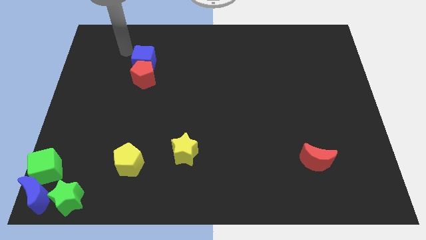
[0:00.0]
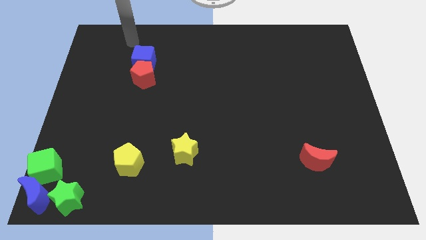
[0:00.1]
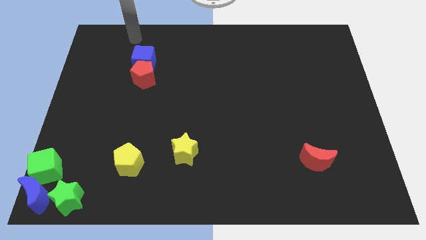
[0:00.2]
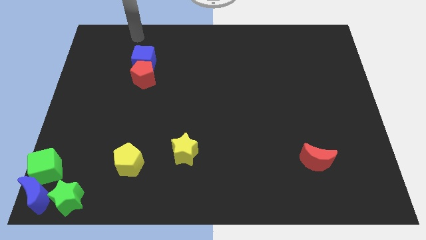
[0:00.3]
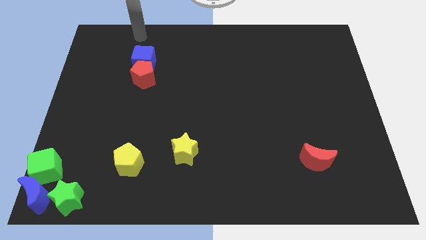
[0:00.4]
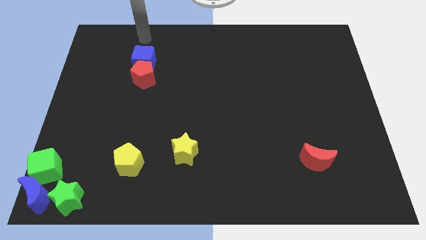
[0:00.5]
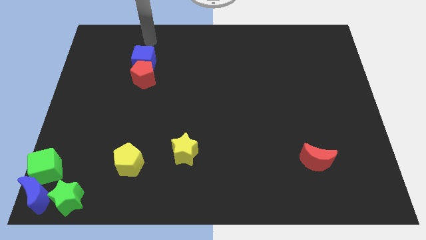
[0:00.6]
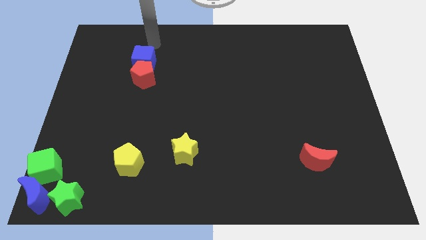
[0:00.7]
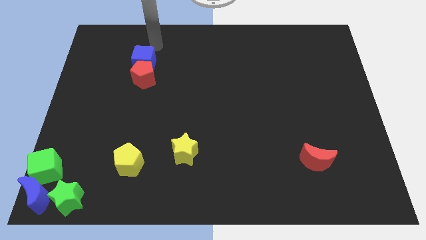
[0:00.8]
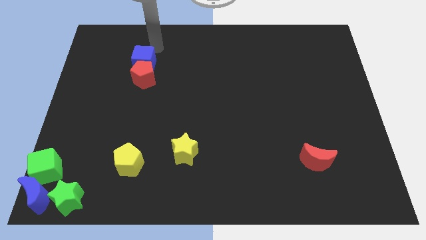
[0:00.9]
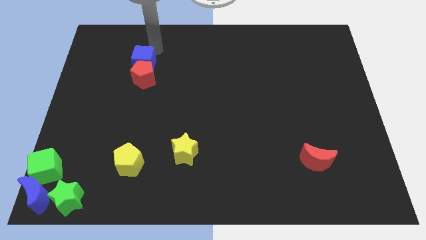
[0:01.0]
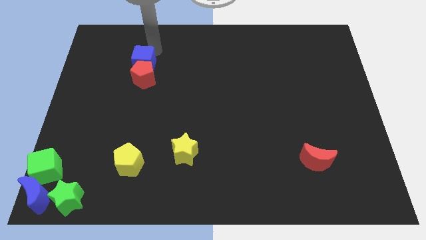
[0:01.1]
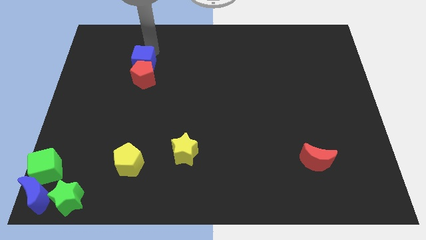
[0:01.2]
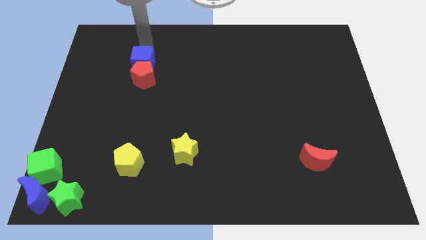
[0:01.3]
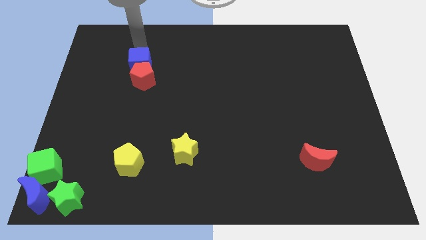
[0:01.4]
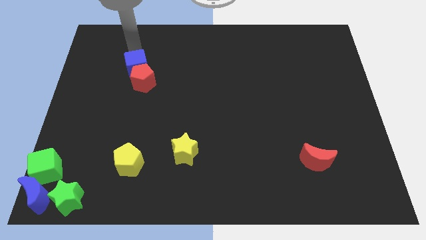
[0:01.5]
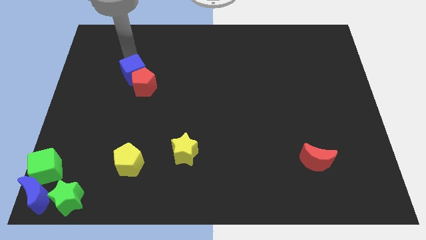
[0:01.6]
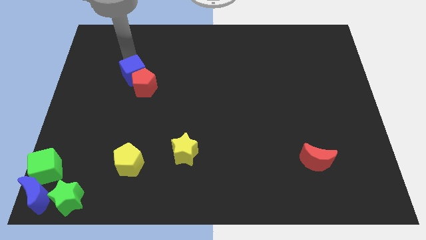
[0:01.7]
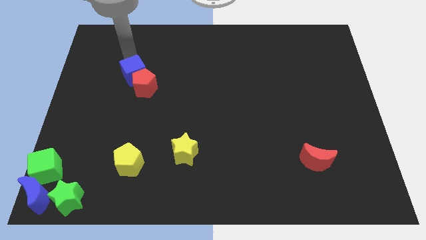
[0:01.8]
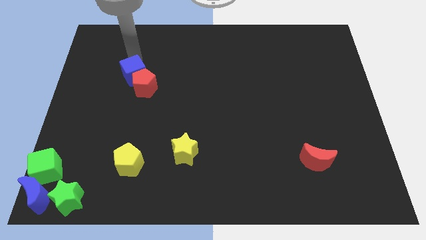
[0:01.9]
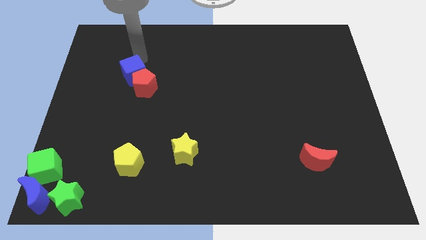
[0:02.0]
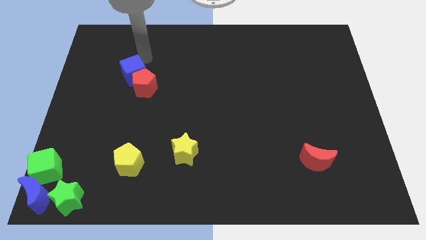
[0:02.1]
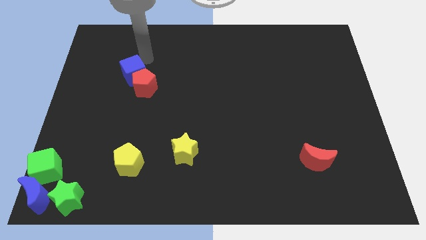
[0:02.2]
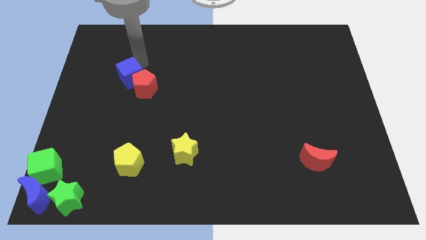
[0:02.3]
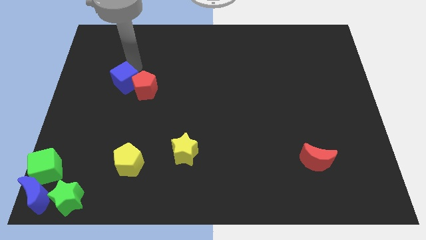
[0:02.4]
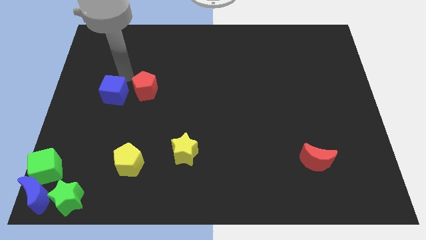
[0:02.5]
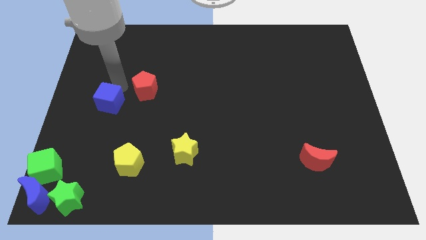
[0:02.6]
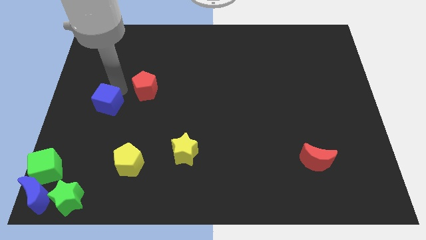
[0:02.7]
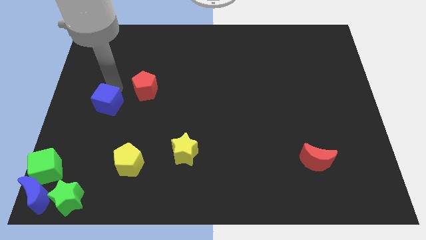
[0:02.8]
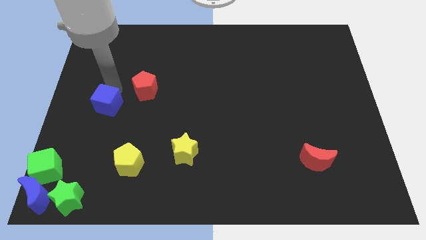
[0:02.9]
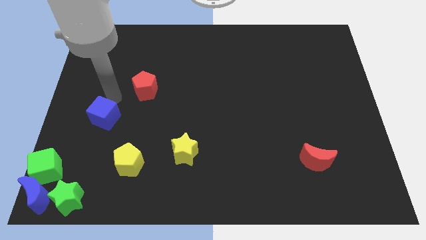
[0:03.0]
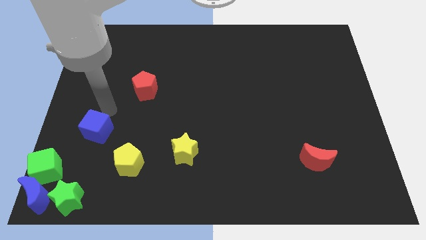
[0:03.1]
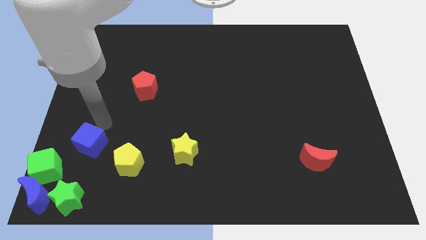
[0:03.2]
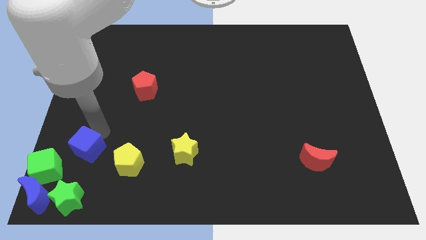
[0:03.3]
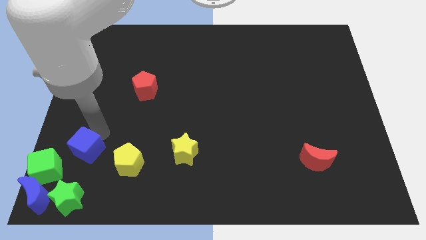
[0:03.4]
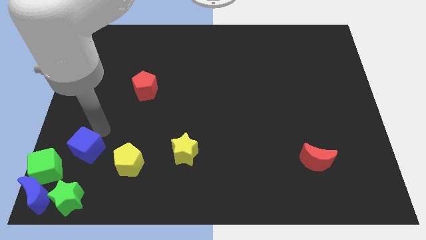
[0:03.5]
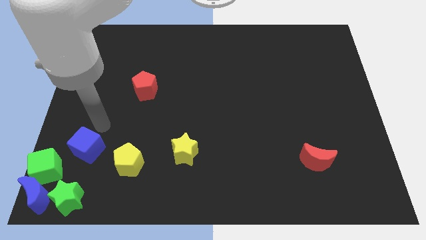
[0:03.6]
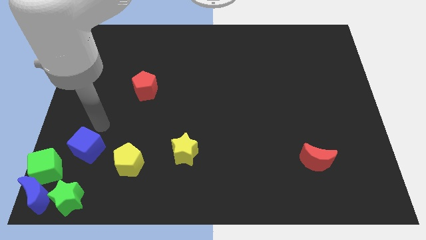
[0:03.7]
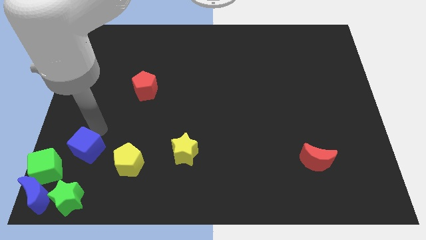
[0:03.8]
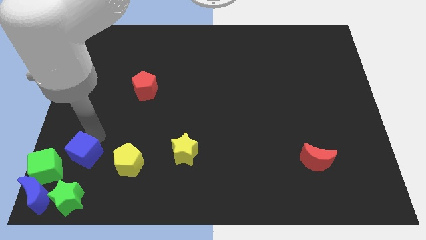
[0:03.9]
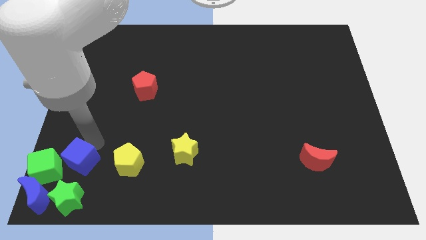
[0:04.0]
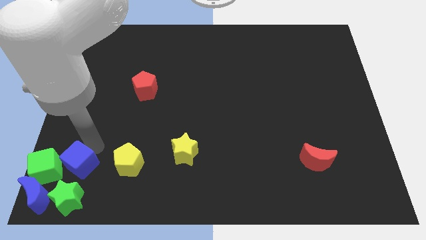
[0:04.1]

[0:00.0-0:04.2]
move blue cube above the green star

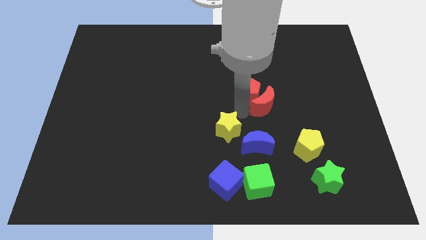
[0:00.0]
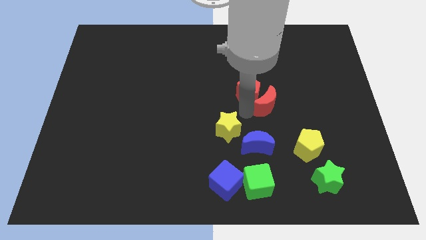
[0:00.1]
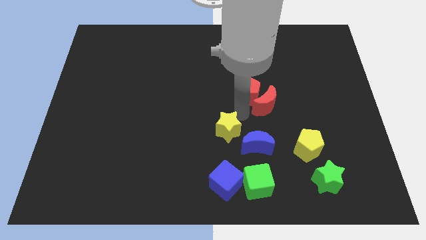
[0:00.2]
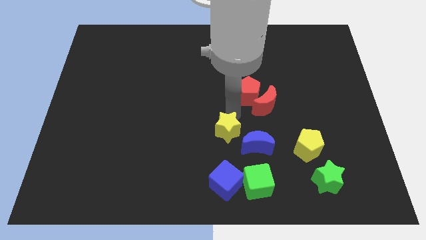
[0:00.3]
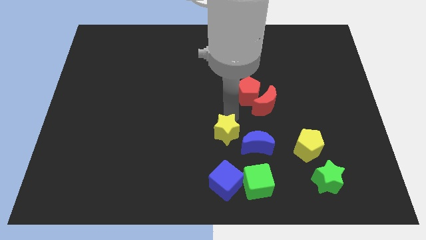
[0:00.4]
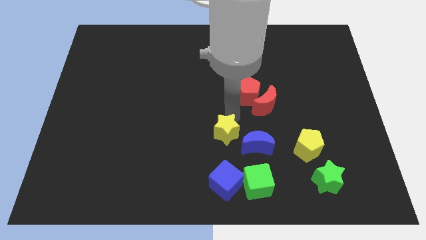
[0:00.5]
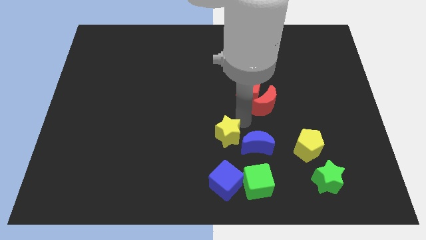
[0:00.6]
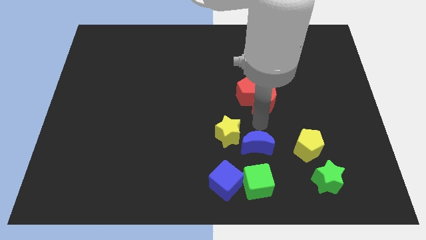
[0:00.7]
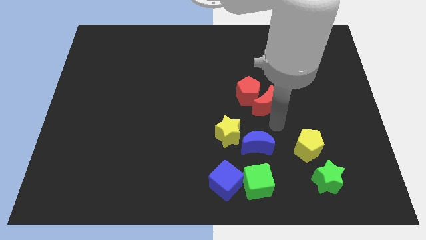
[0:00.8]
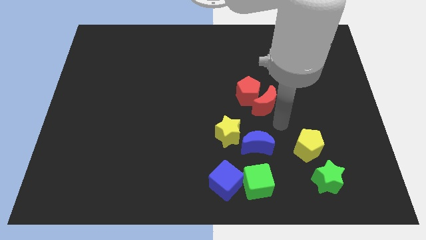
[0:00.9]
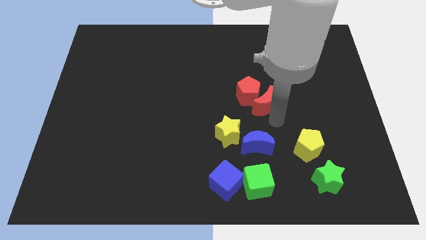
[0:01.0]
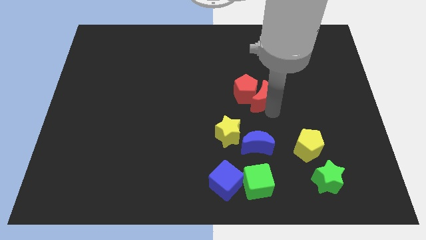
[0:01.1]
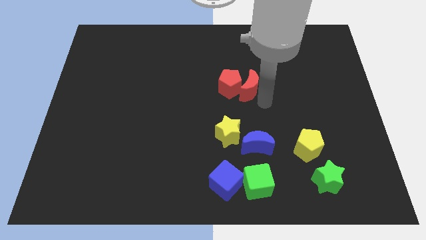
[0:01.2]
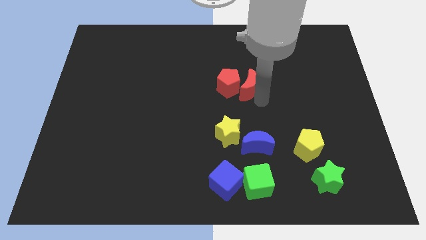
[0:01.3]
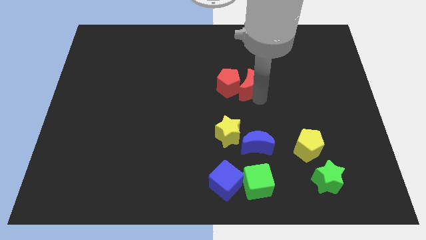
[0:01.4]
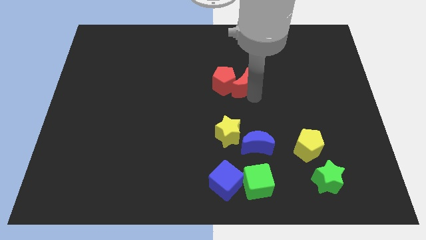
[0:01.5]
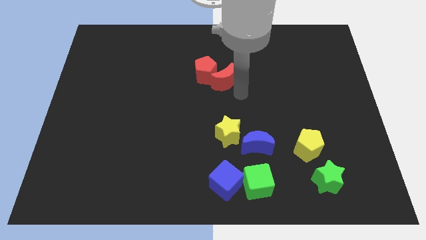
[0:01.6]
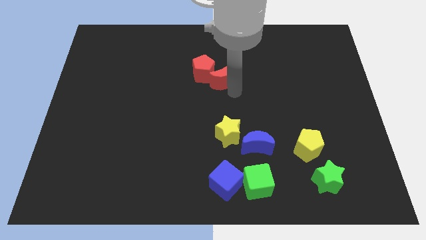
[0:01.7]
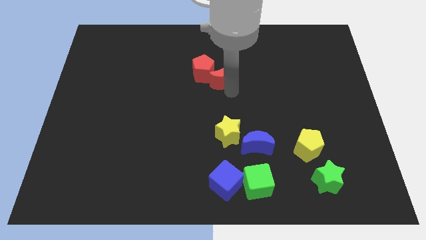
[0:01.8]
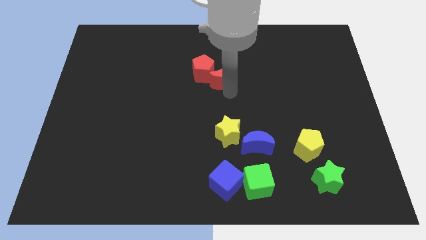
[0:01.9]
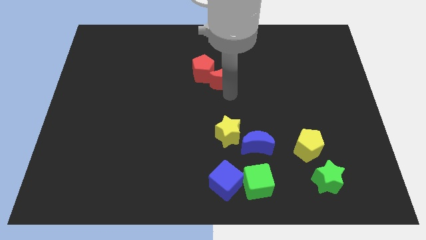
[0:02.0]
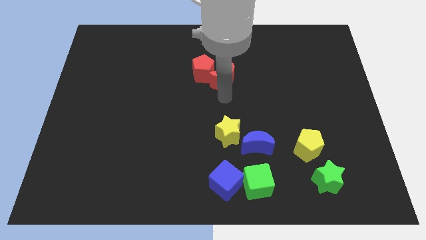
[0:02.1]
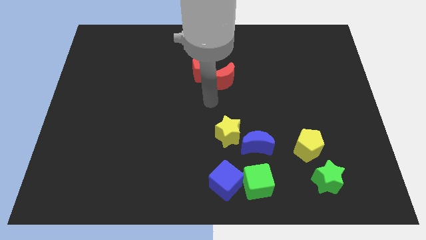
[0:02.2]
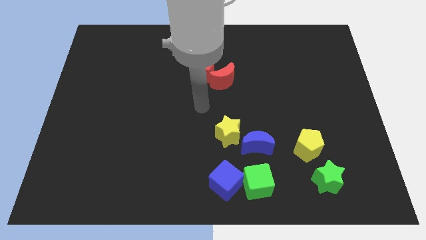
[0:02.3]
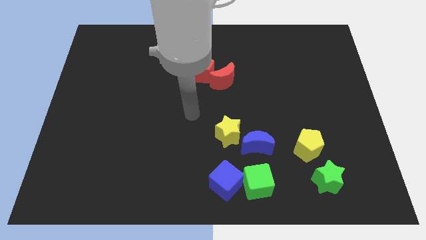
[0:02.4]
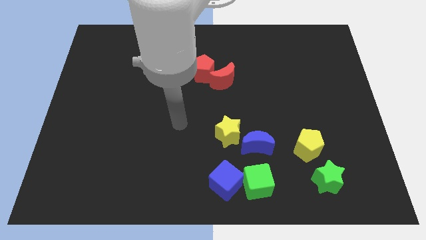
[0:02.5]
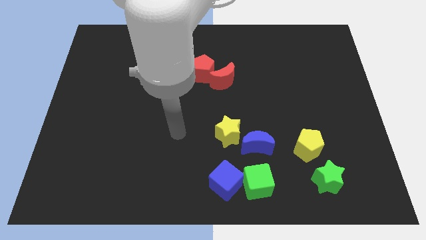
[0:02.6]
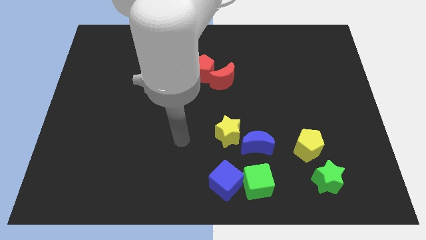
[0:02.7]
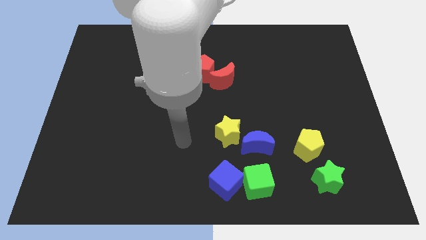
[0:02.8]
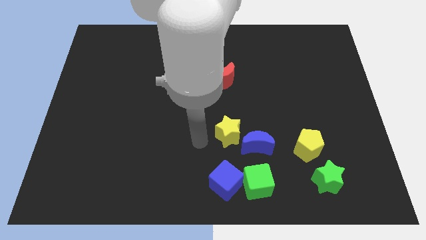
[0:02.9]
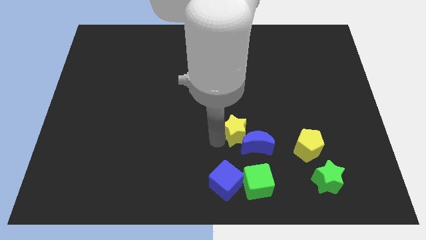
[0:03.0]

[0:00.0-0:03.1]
push the red crescent and red pentagon towards top left side

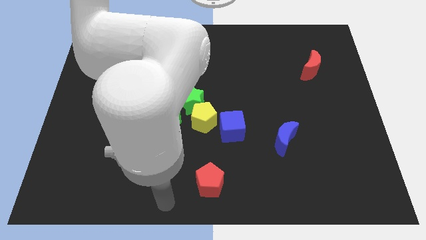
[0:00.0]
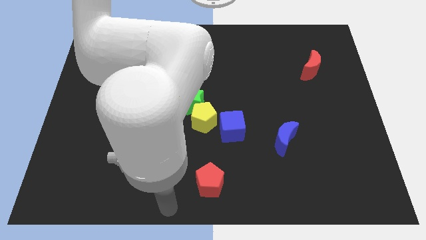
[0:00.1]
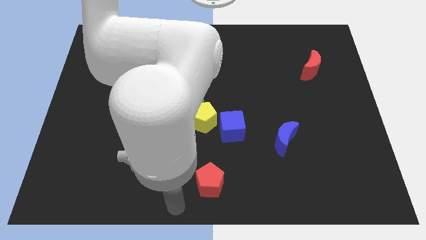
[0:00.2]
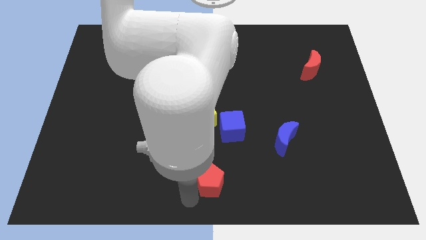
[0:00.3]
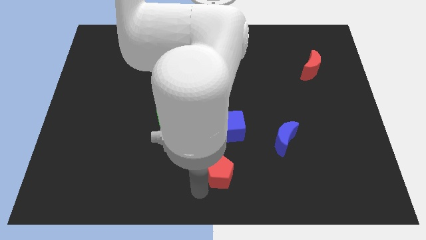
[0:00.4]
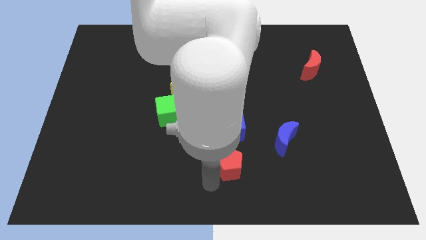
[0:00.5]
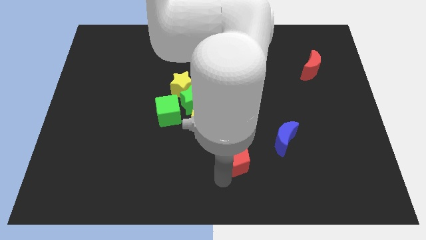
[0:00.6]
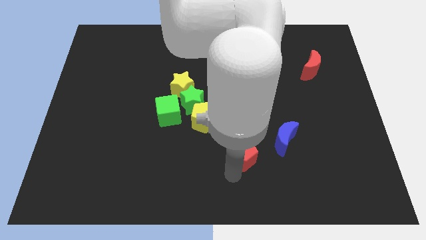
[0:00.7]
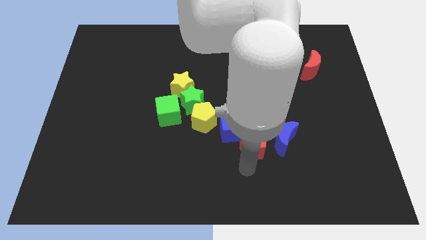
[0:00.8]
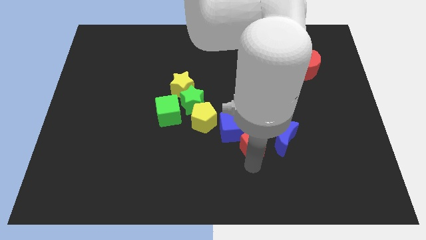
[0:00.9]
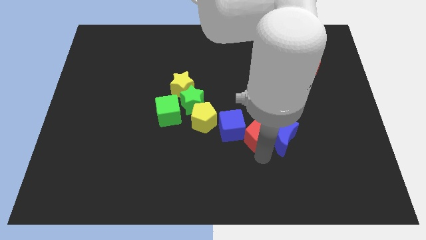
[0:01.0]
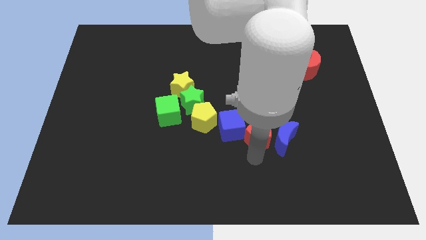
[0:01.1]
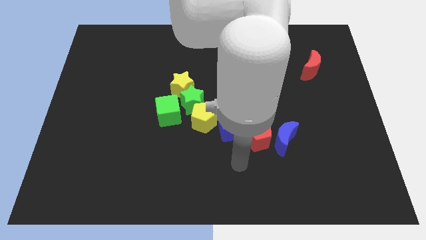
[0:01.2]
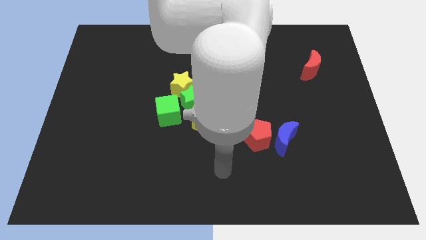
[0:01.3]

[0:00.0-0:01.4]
push red pentagon to the centre of blue cube and blue crescent

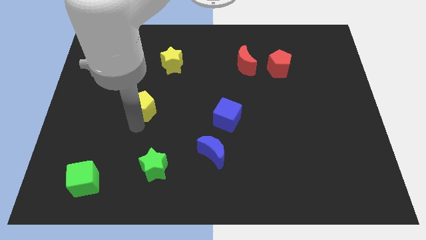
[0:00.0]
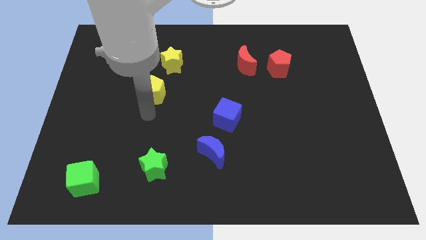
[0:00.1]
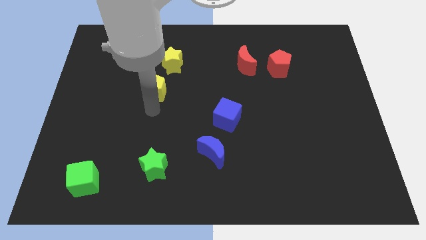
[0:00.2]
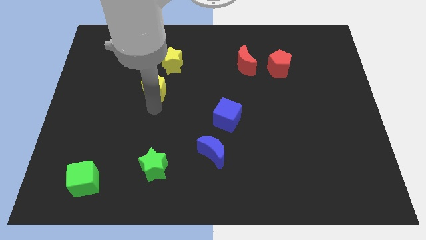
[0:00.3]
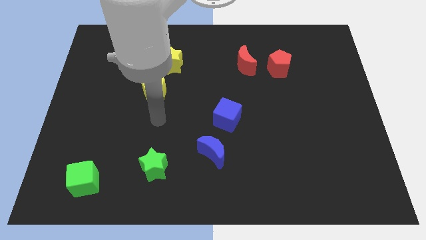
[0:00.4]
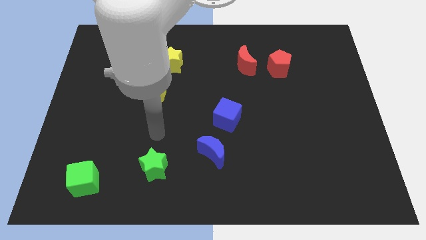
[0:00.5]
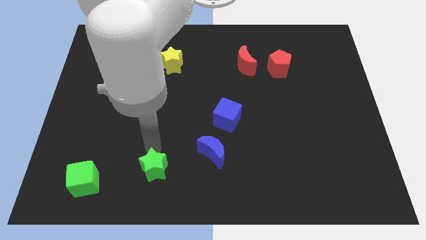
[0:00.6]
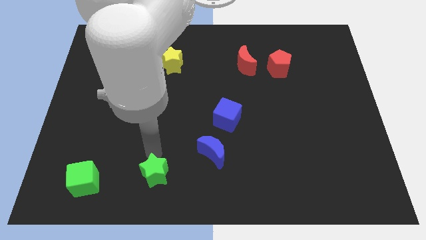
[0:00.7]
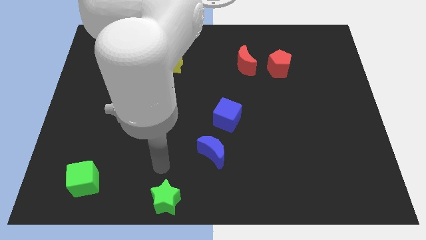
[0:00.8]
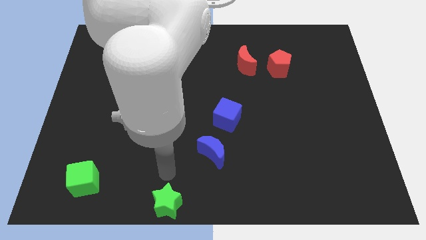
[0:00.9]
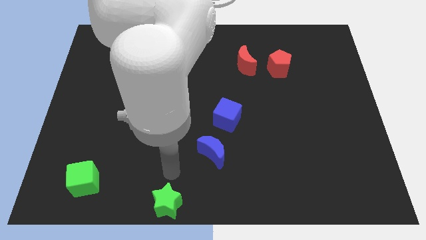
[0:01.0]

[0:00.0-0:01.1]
push green star towards bottom center
